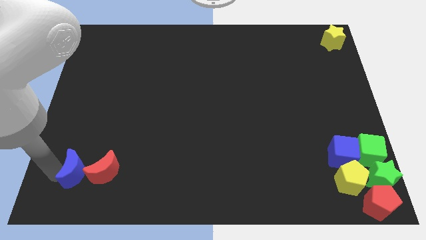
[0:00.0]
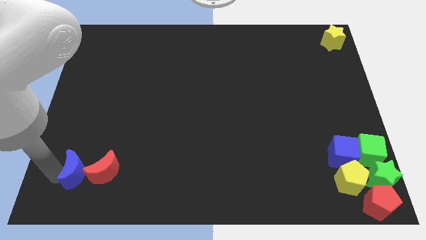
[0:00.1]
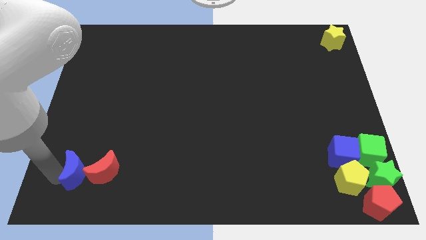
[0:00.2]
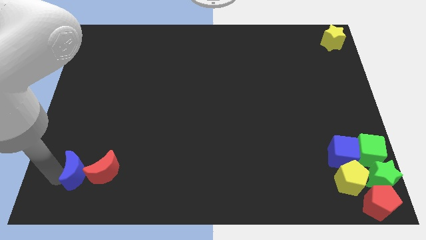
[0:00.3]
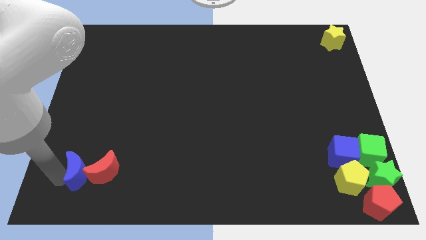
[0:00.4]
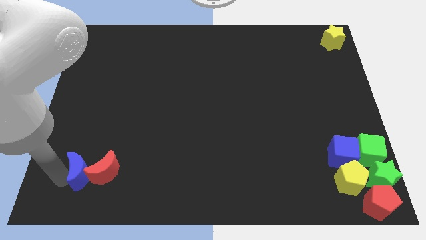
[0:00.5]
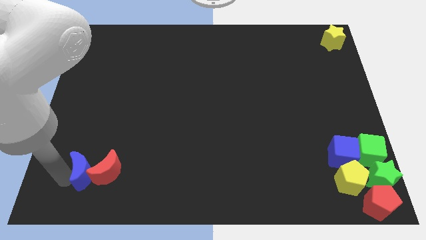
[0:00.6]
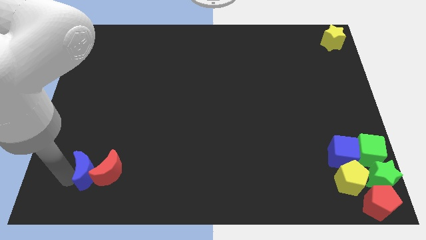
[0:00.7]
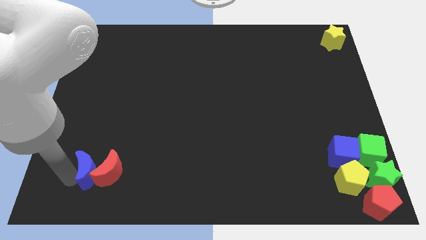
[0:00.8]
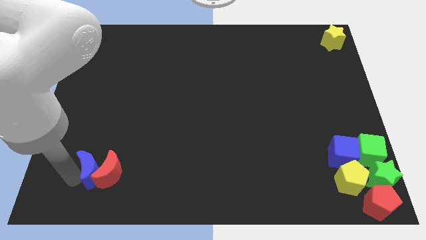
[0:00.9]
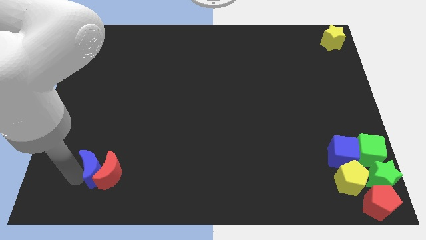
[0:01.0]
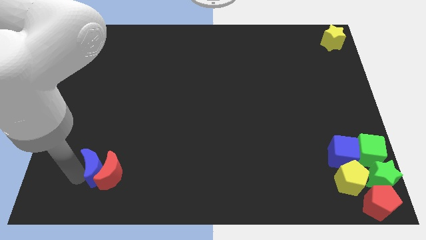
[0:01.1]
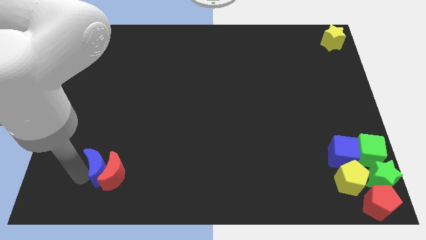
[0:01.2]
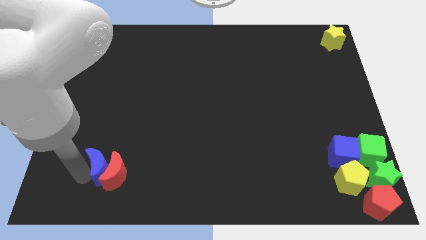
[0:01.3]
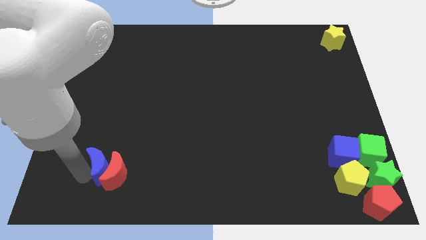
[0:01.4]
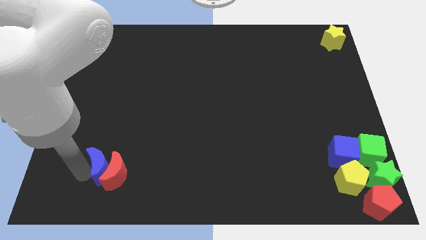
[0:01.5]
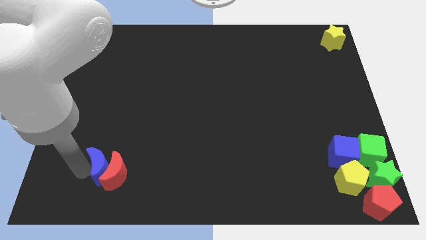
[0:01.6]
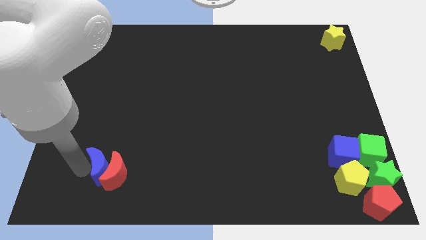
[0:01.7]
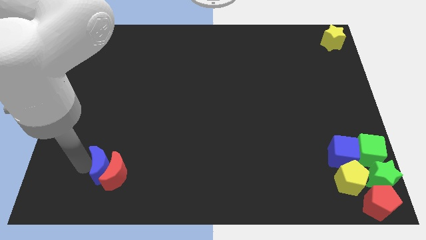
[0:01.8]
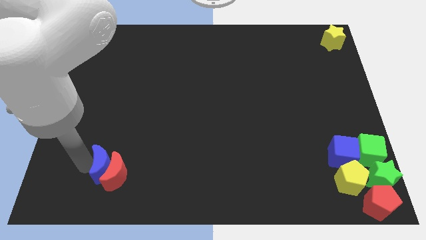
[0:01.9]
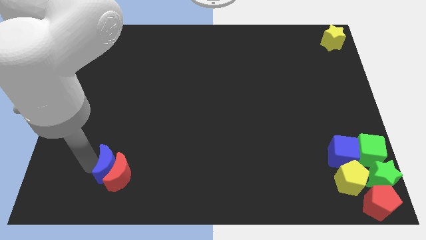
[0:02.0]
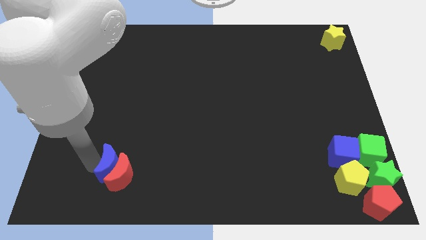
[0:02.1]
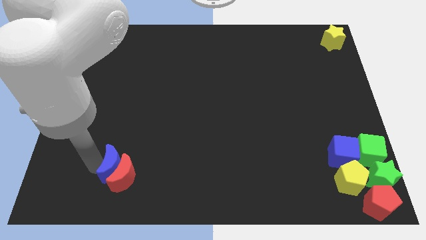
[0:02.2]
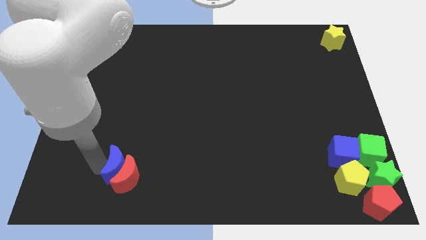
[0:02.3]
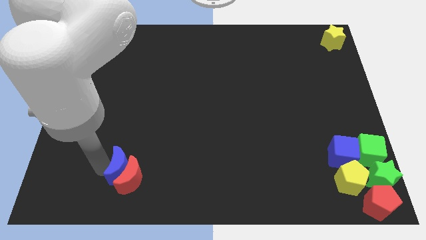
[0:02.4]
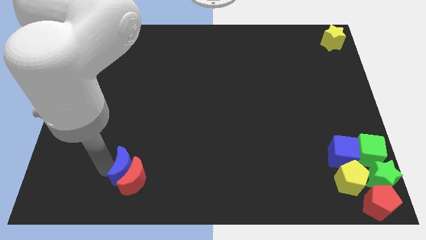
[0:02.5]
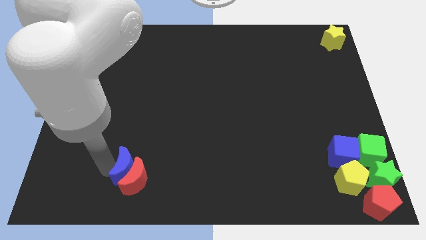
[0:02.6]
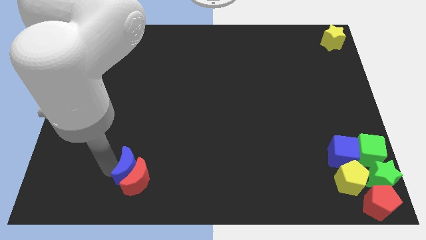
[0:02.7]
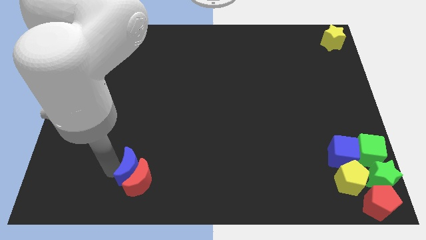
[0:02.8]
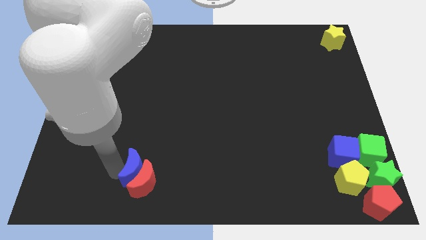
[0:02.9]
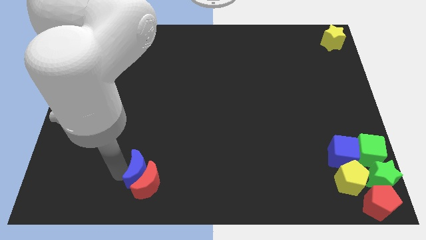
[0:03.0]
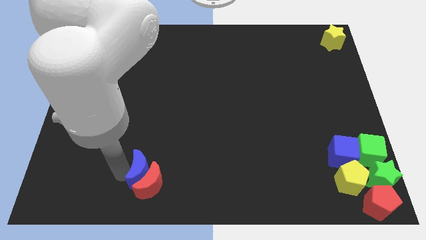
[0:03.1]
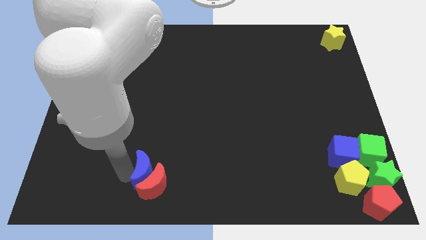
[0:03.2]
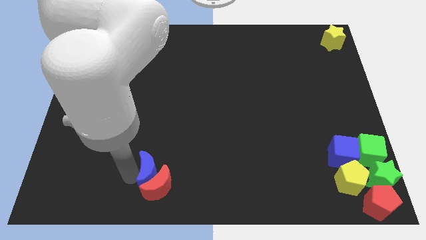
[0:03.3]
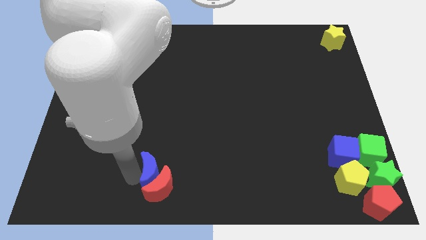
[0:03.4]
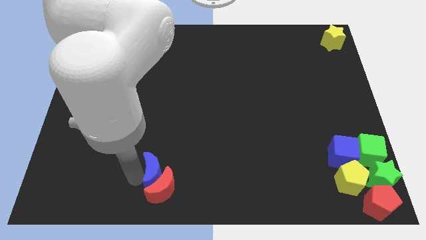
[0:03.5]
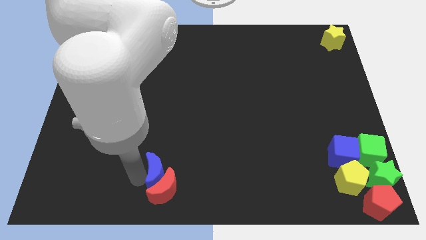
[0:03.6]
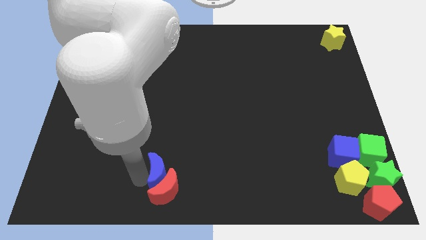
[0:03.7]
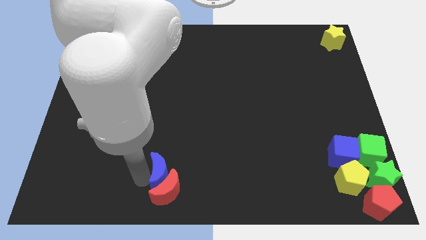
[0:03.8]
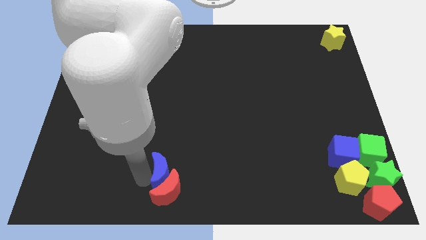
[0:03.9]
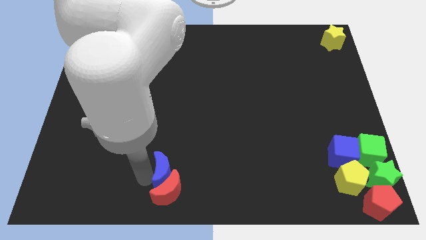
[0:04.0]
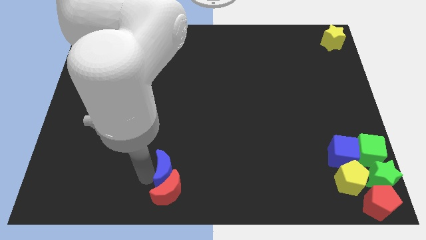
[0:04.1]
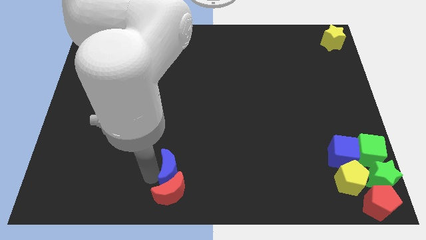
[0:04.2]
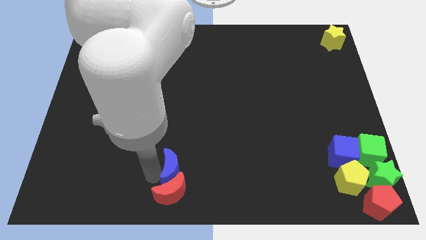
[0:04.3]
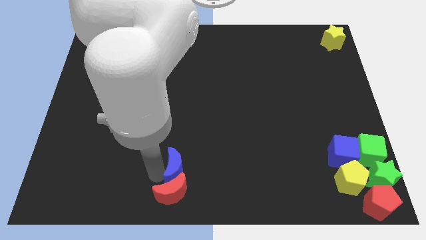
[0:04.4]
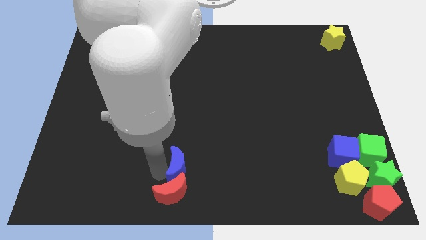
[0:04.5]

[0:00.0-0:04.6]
push the red and blue moons to the bottom side

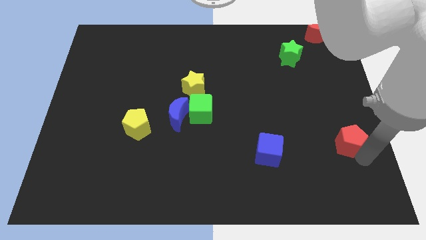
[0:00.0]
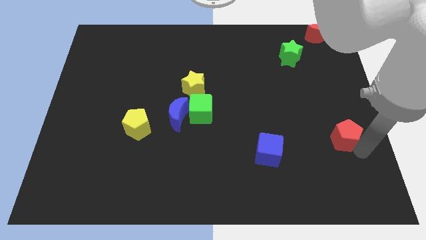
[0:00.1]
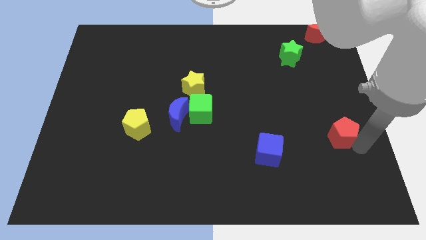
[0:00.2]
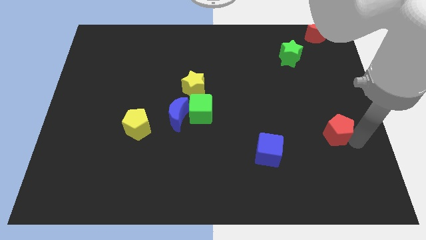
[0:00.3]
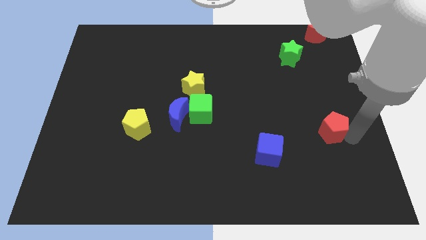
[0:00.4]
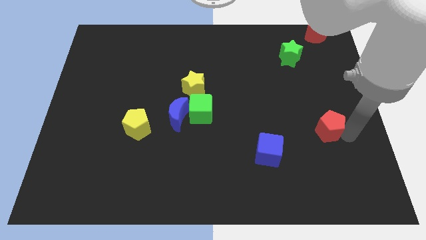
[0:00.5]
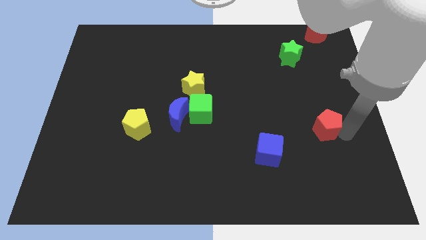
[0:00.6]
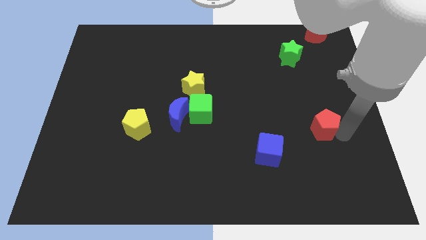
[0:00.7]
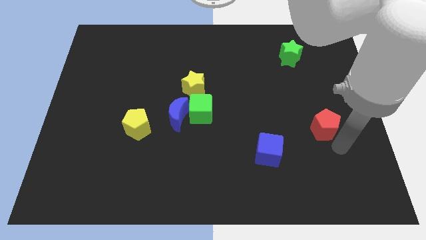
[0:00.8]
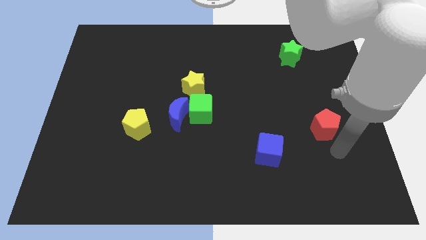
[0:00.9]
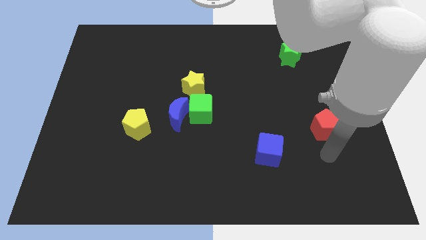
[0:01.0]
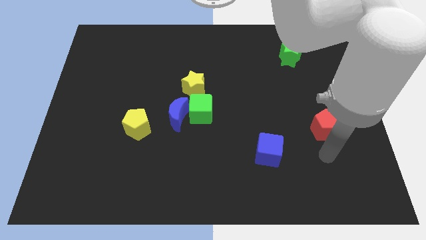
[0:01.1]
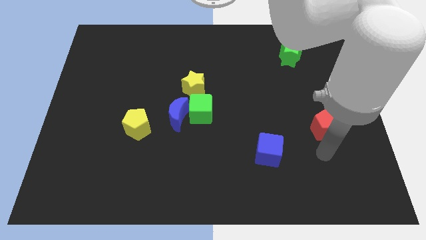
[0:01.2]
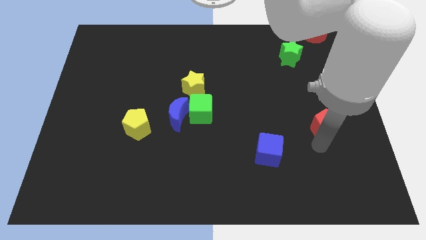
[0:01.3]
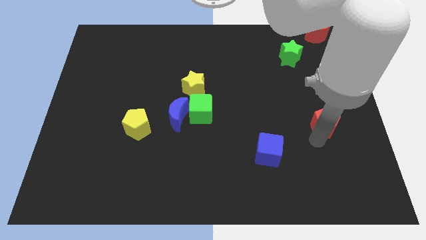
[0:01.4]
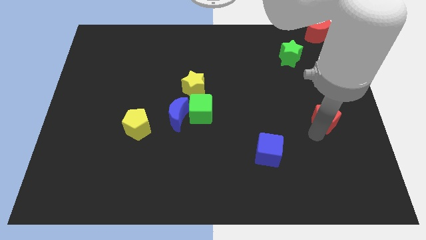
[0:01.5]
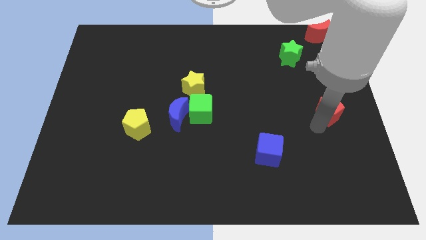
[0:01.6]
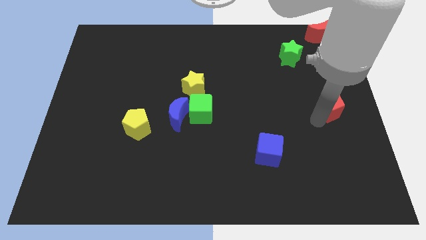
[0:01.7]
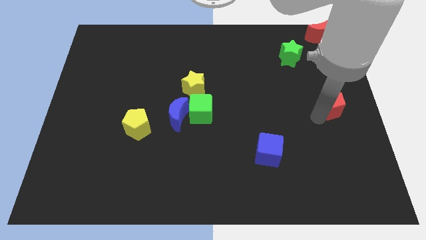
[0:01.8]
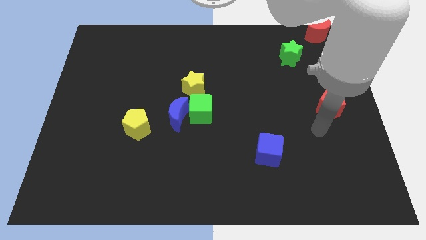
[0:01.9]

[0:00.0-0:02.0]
push the red pentagon towards up

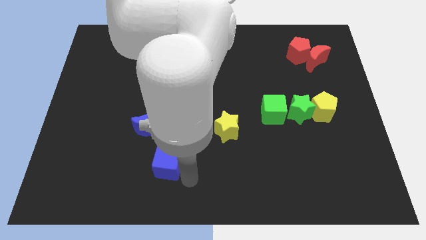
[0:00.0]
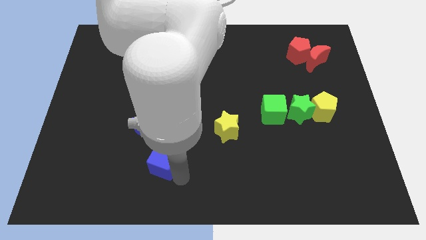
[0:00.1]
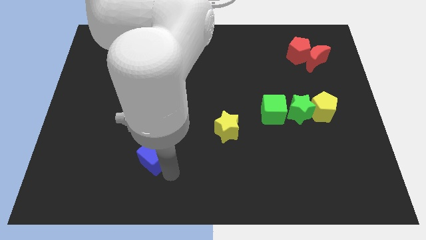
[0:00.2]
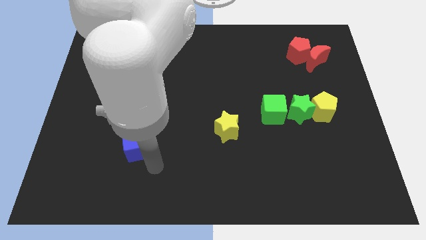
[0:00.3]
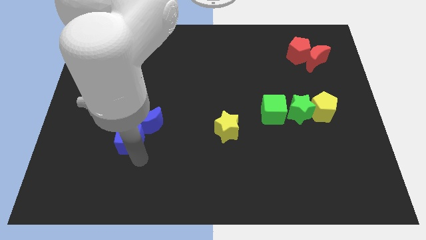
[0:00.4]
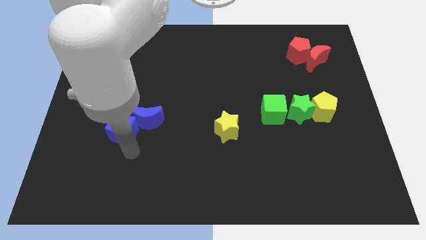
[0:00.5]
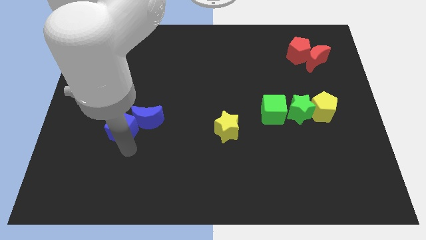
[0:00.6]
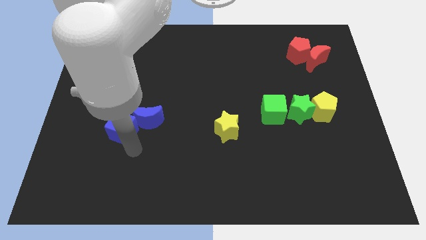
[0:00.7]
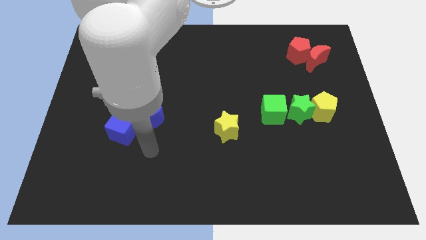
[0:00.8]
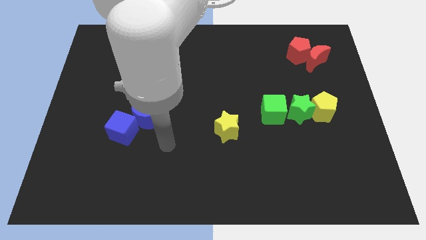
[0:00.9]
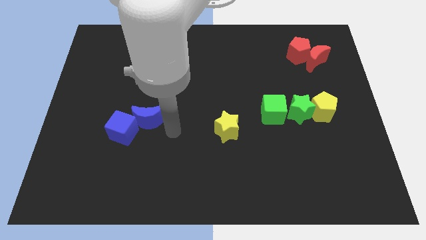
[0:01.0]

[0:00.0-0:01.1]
push the blue cube into the blue crescent

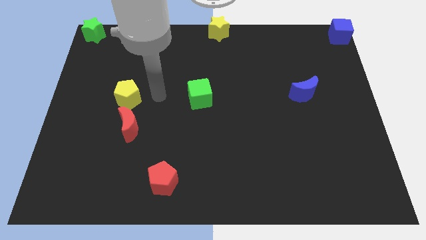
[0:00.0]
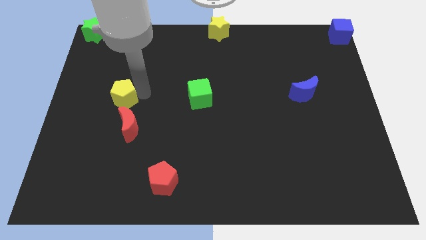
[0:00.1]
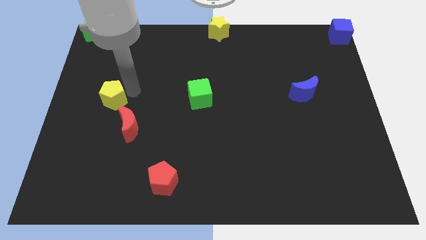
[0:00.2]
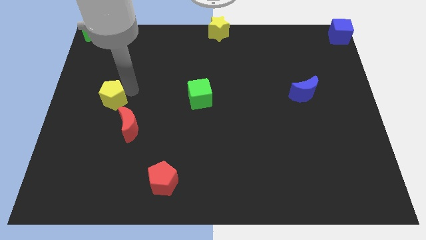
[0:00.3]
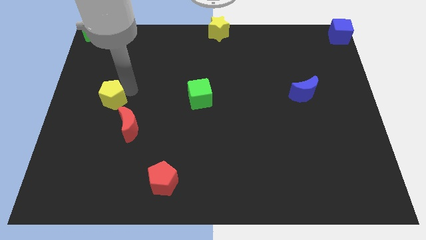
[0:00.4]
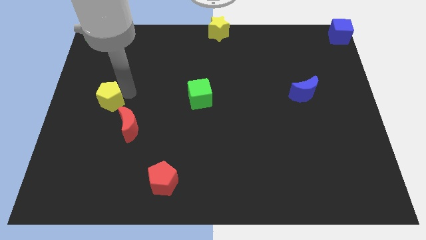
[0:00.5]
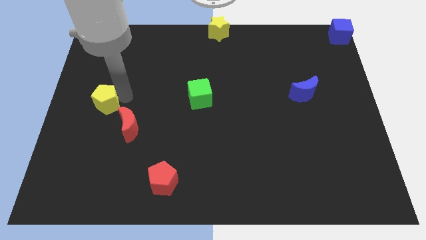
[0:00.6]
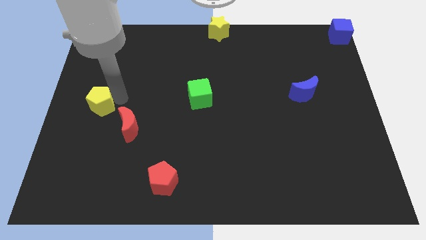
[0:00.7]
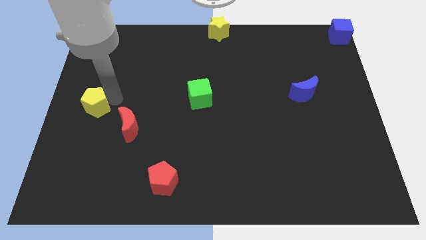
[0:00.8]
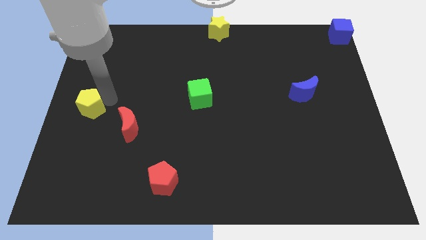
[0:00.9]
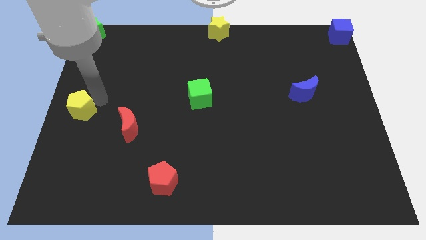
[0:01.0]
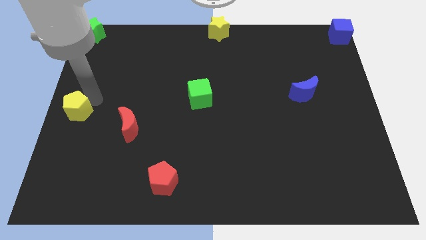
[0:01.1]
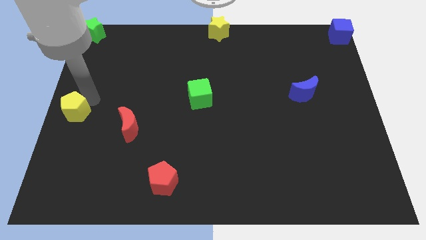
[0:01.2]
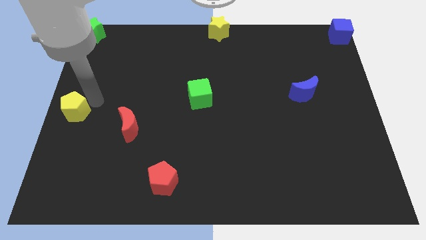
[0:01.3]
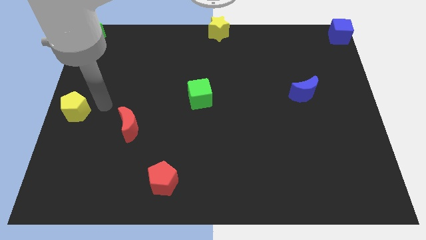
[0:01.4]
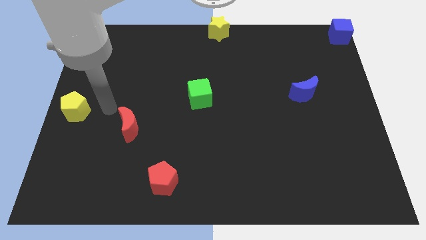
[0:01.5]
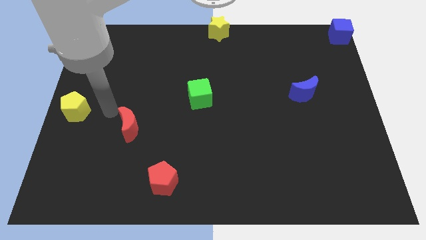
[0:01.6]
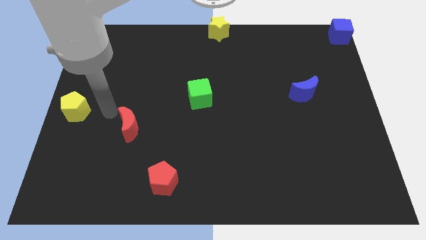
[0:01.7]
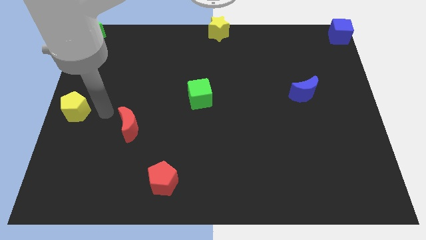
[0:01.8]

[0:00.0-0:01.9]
move the yellow pentagon to the left center of the board
